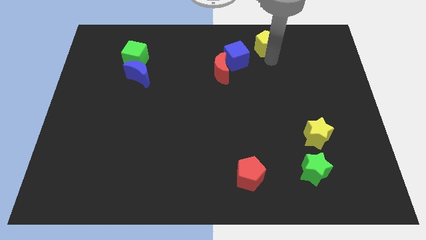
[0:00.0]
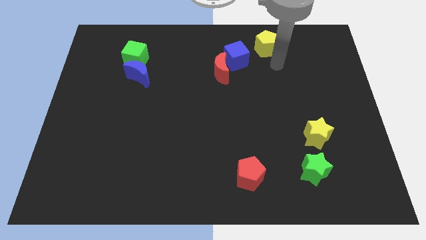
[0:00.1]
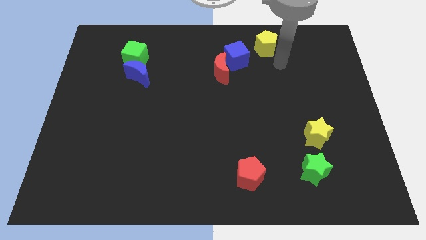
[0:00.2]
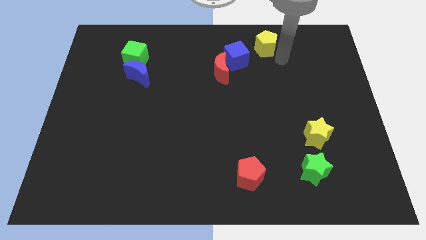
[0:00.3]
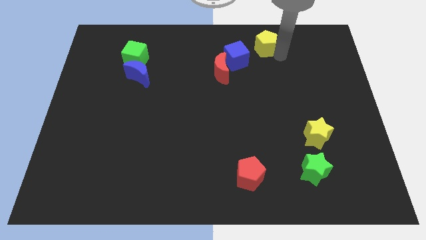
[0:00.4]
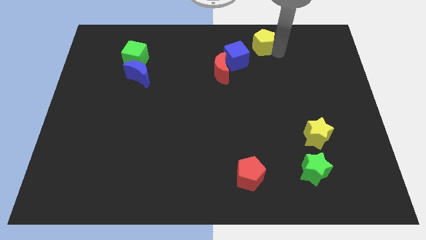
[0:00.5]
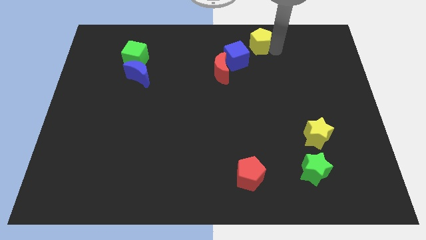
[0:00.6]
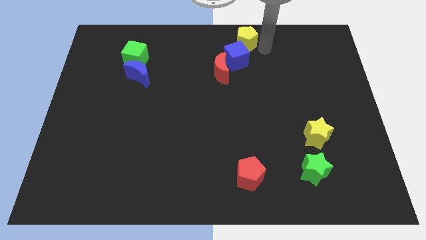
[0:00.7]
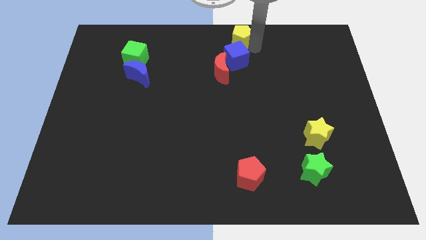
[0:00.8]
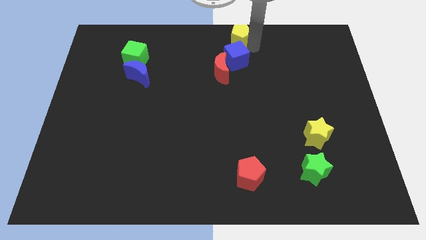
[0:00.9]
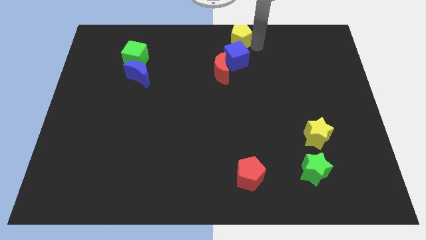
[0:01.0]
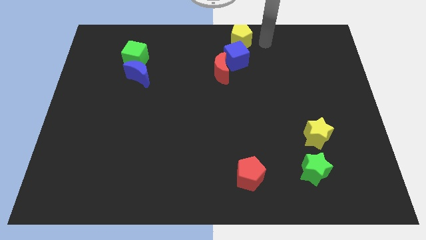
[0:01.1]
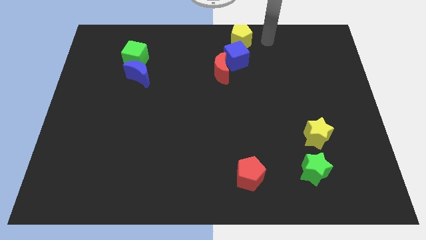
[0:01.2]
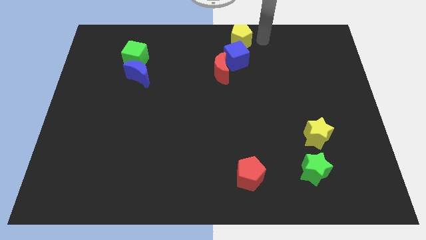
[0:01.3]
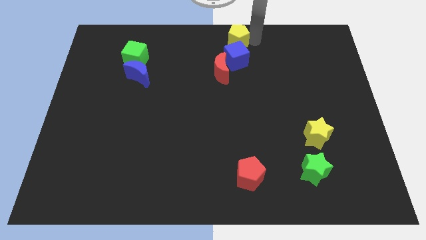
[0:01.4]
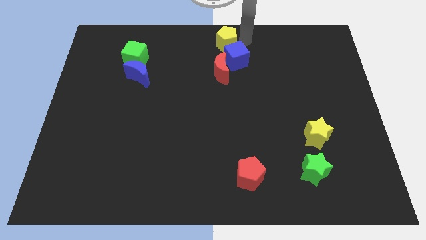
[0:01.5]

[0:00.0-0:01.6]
place the yellow pentagon above the blue cube

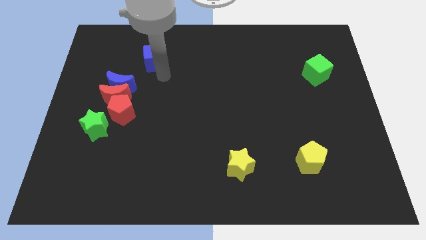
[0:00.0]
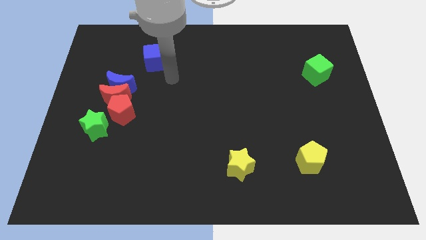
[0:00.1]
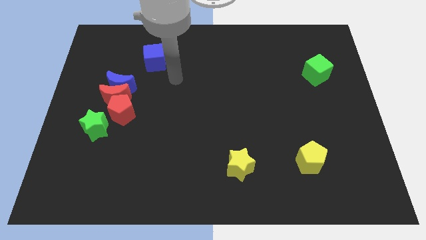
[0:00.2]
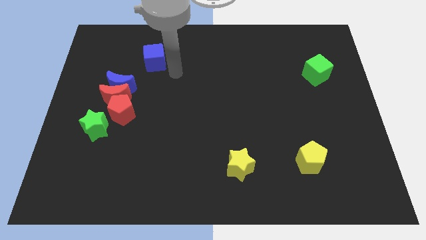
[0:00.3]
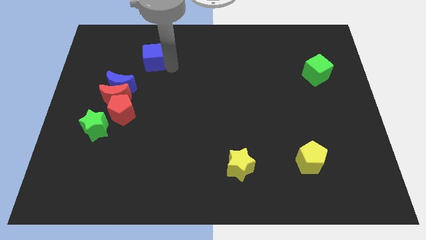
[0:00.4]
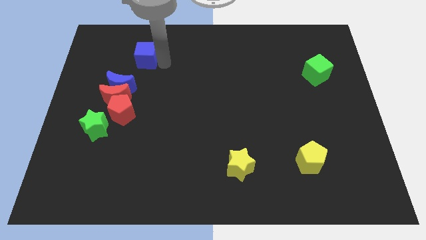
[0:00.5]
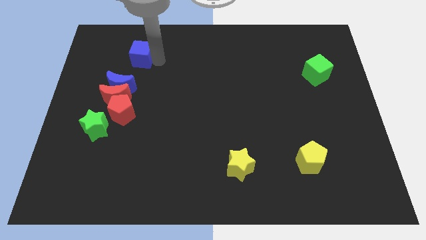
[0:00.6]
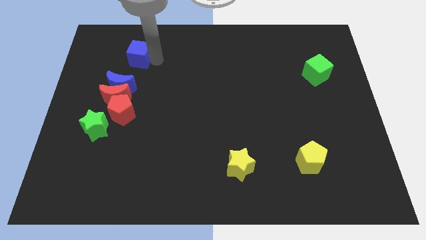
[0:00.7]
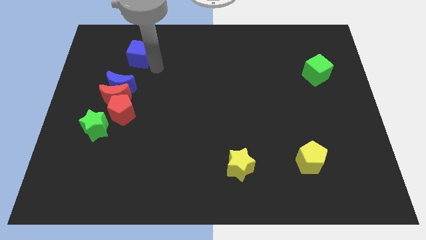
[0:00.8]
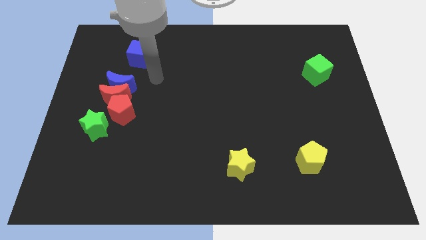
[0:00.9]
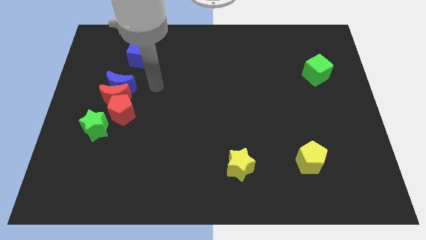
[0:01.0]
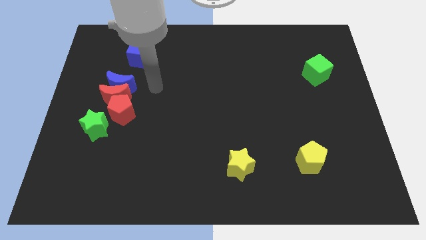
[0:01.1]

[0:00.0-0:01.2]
place the blue cube to the top of the blue crescent

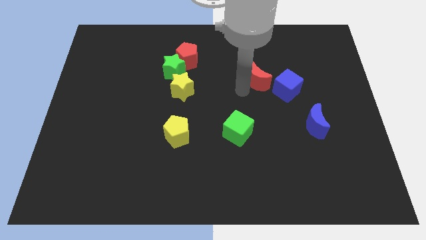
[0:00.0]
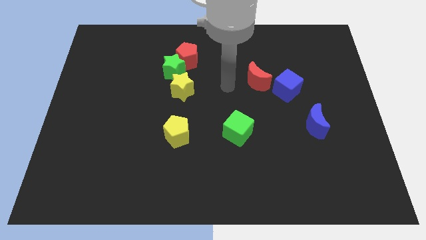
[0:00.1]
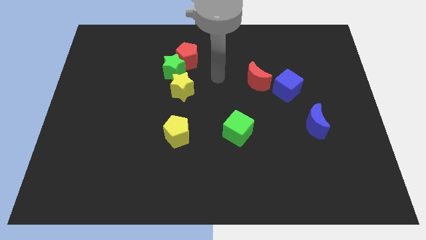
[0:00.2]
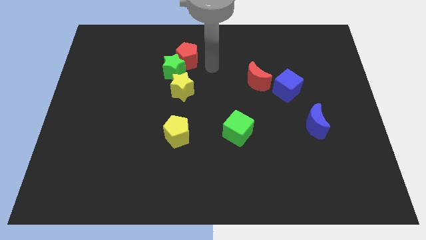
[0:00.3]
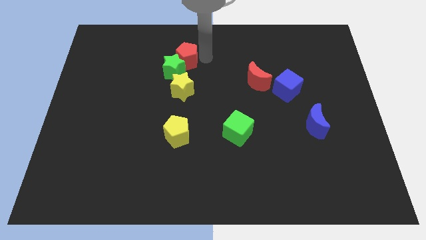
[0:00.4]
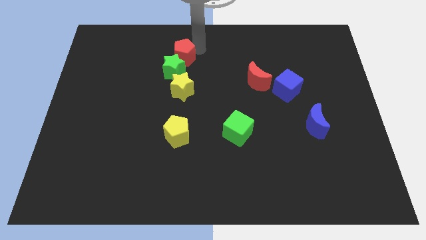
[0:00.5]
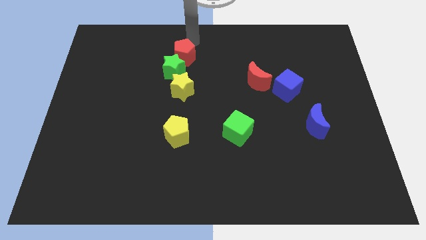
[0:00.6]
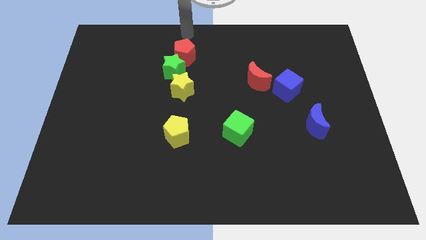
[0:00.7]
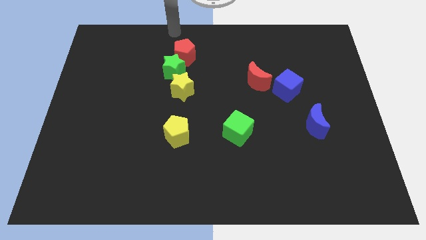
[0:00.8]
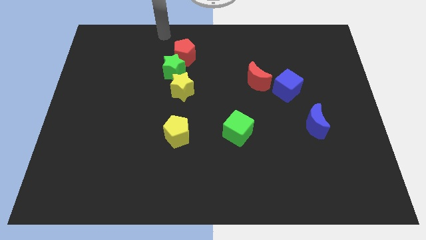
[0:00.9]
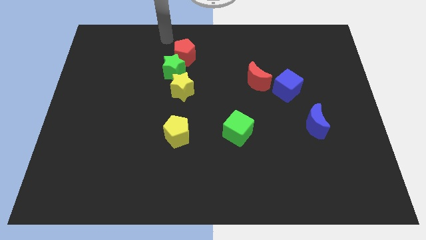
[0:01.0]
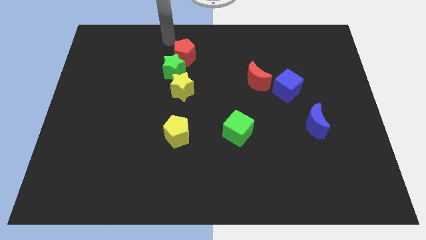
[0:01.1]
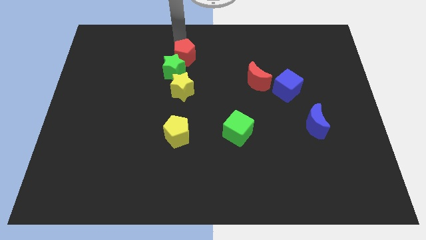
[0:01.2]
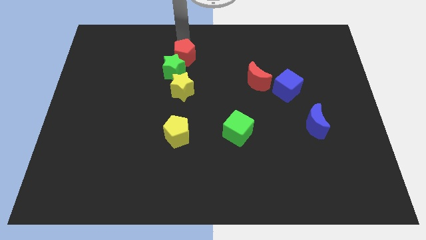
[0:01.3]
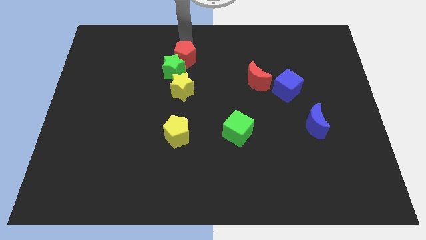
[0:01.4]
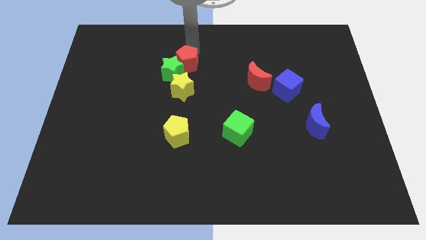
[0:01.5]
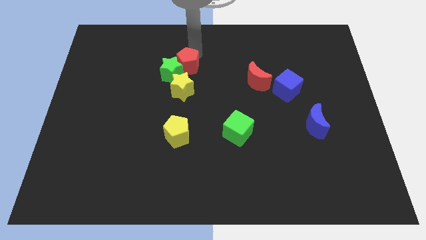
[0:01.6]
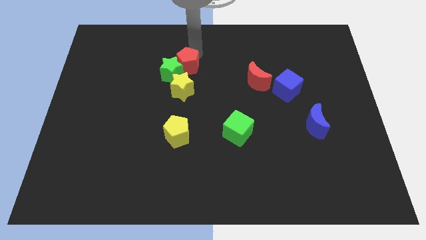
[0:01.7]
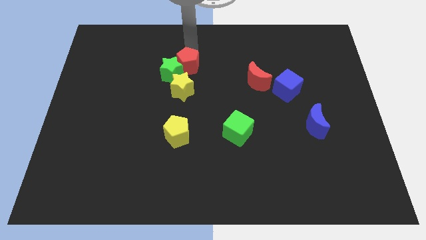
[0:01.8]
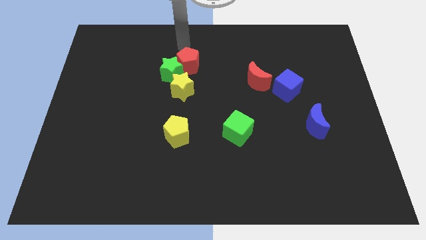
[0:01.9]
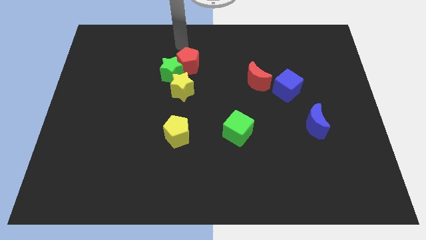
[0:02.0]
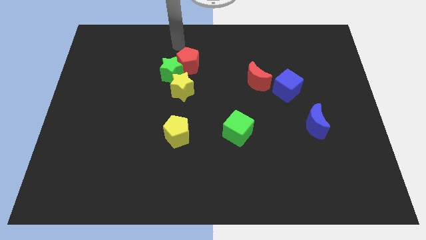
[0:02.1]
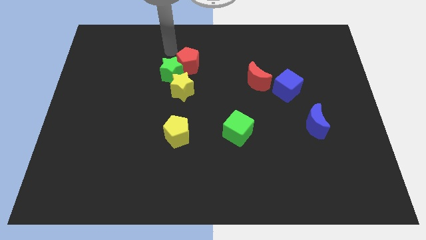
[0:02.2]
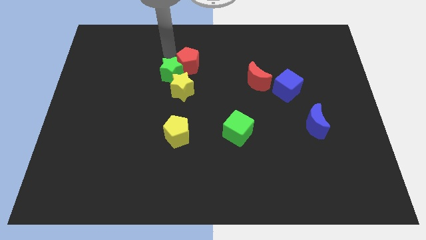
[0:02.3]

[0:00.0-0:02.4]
move the red pentagon to the right of the green star

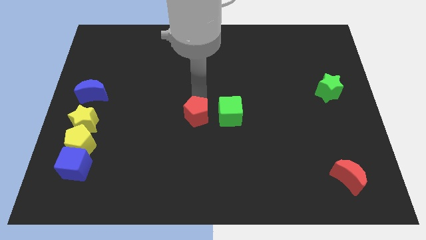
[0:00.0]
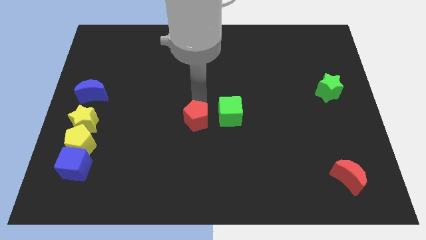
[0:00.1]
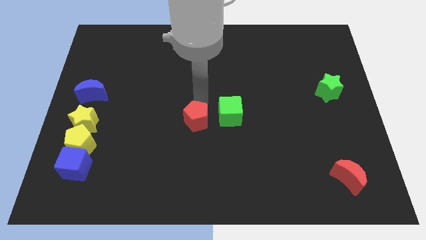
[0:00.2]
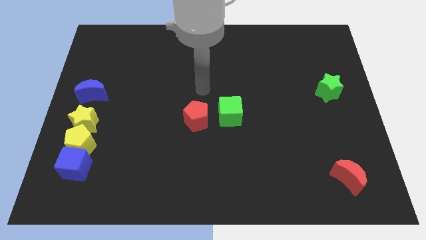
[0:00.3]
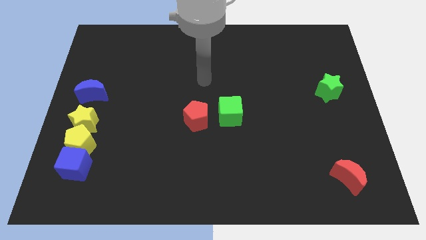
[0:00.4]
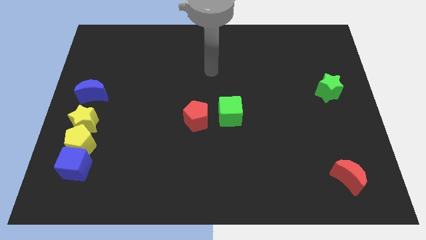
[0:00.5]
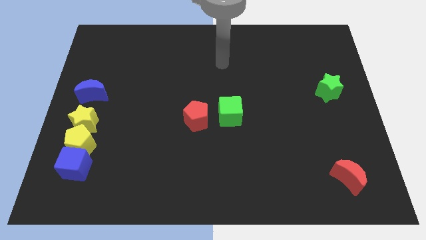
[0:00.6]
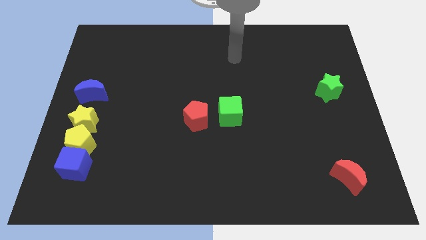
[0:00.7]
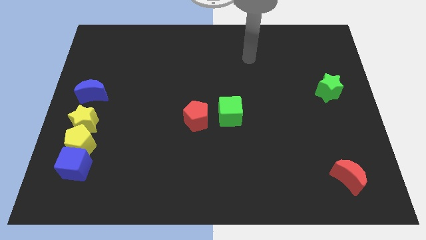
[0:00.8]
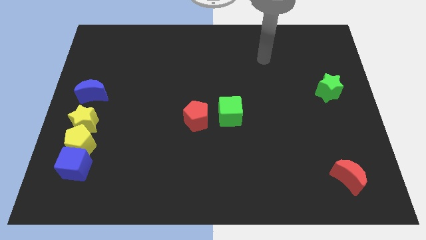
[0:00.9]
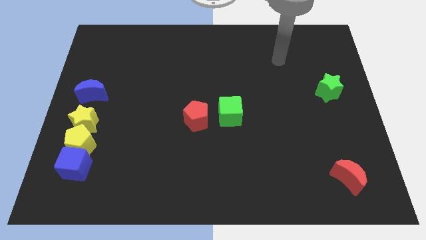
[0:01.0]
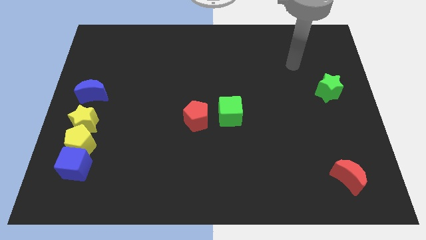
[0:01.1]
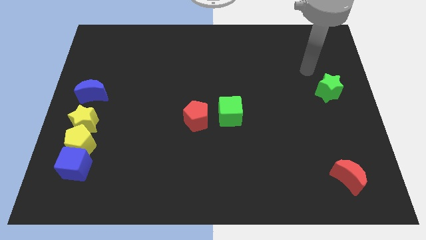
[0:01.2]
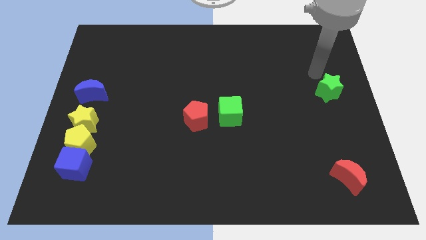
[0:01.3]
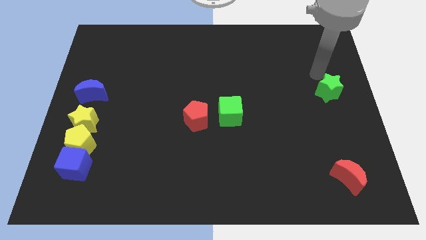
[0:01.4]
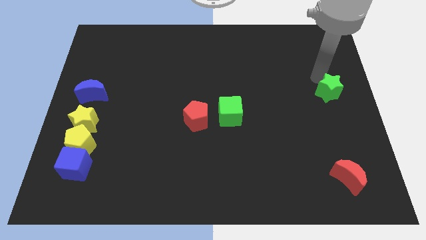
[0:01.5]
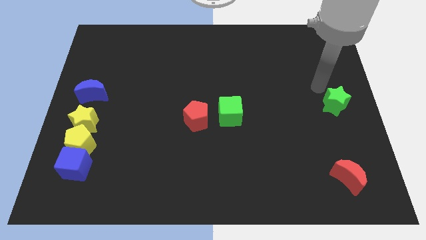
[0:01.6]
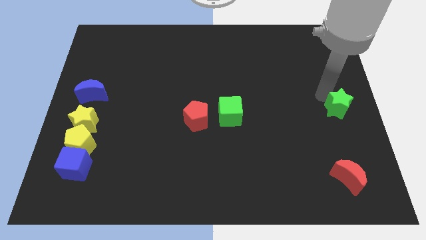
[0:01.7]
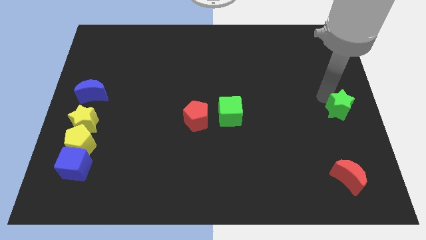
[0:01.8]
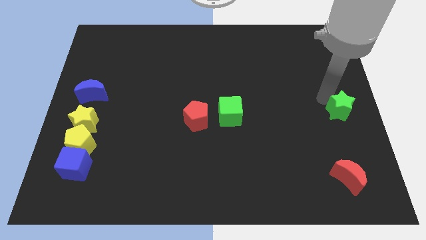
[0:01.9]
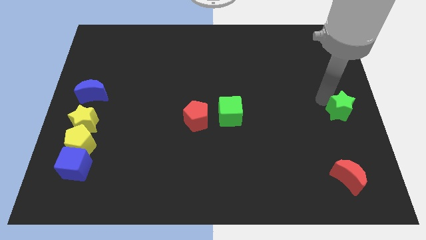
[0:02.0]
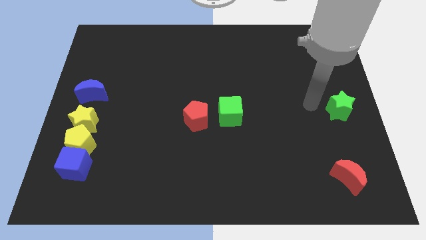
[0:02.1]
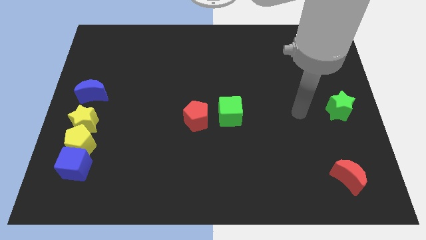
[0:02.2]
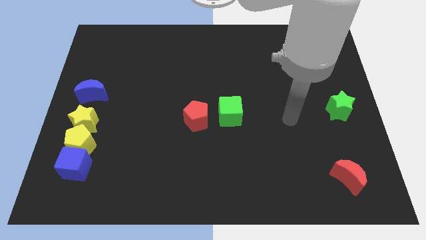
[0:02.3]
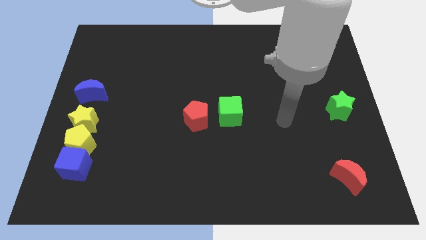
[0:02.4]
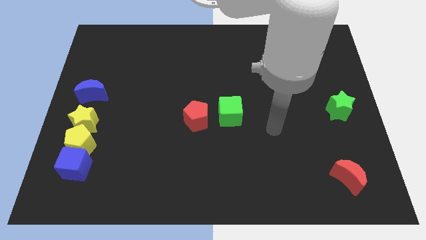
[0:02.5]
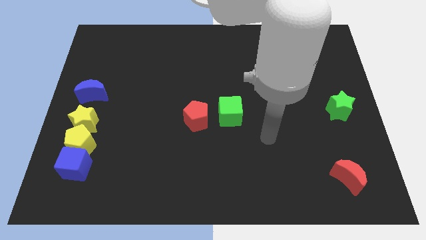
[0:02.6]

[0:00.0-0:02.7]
push the green star right to the green cube

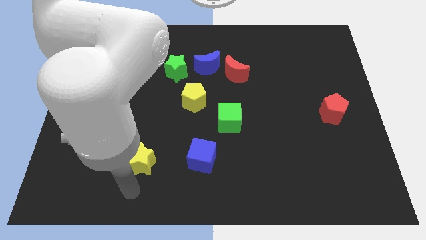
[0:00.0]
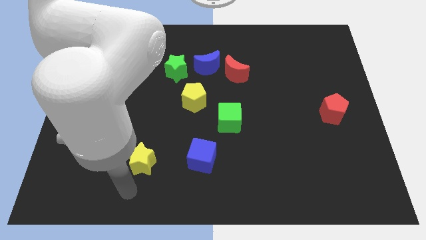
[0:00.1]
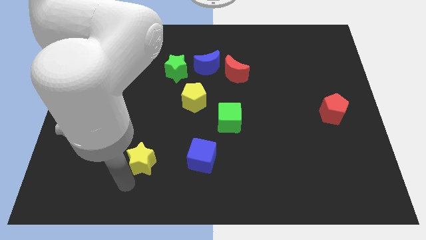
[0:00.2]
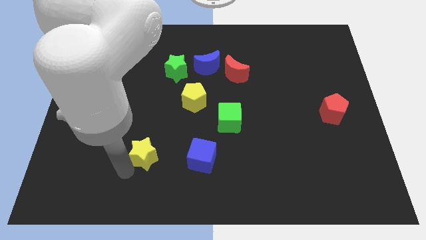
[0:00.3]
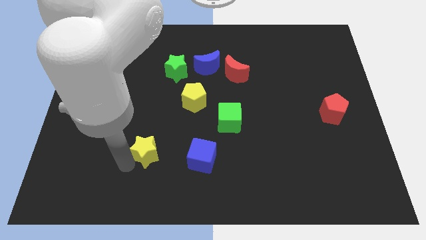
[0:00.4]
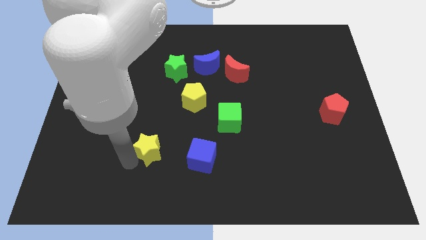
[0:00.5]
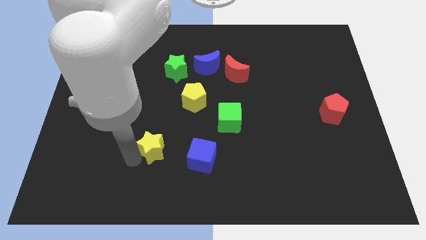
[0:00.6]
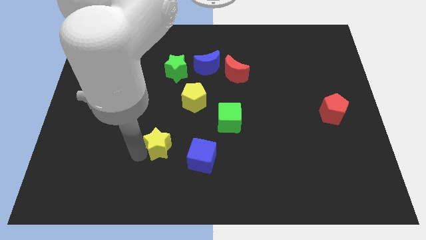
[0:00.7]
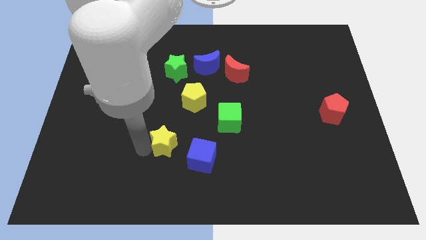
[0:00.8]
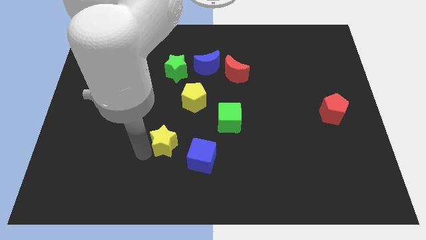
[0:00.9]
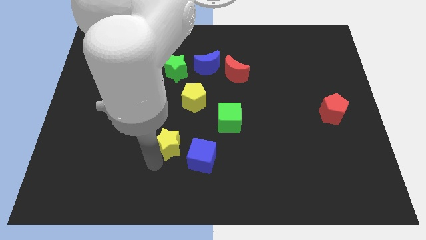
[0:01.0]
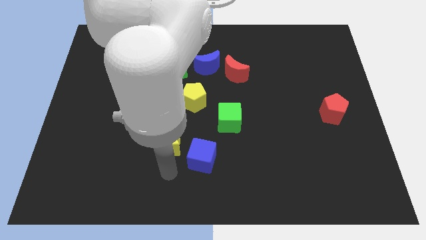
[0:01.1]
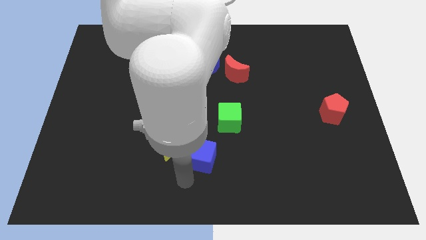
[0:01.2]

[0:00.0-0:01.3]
place the yellow star to the left of the blue cube
